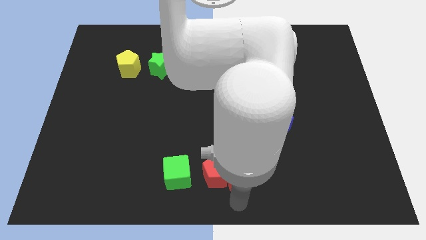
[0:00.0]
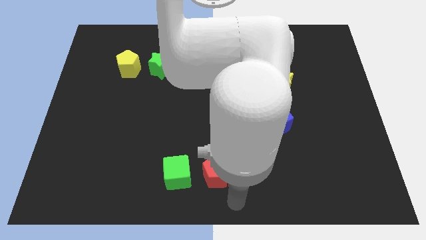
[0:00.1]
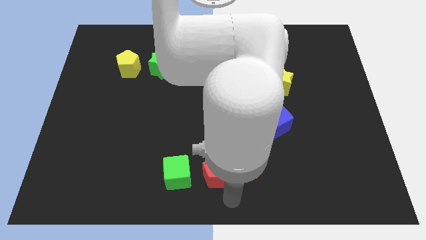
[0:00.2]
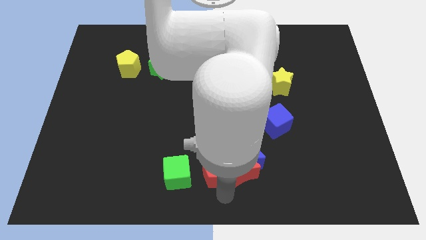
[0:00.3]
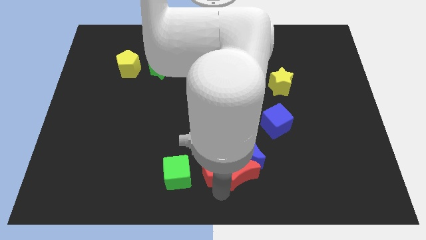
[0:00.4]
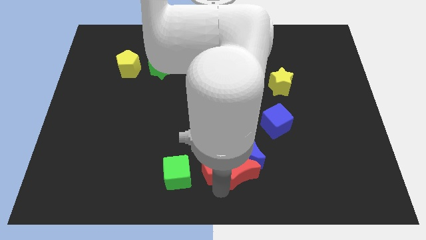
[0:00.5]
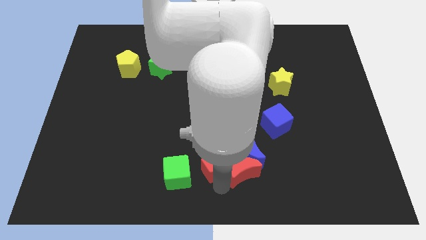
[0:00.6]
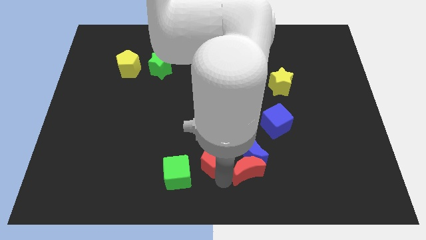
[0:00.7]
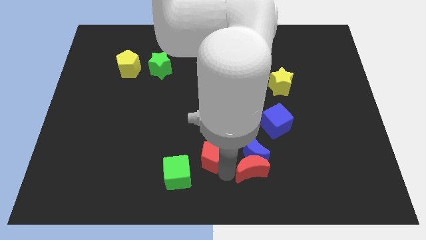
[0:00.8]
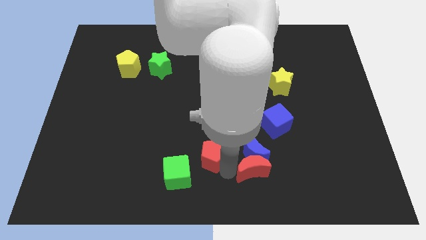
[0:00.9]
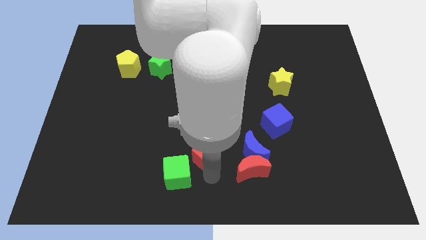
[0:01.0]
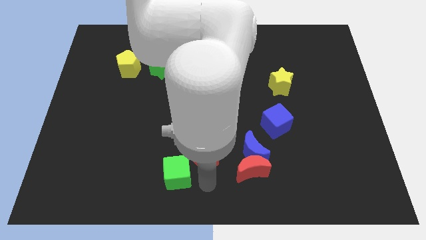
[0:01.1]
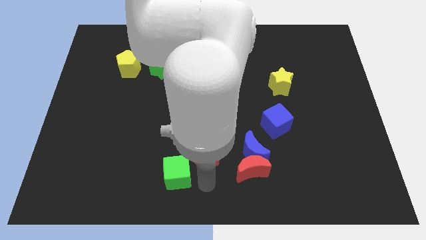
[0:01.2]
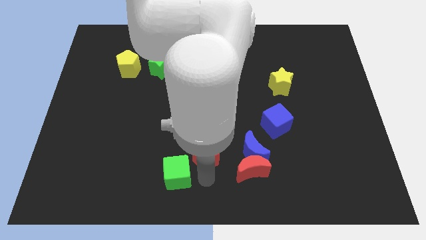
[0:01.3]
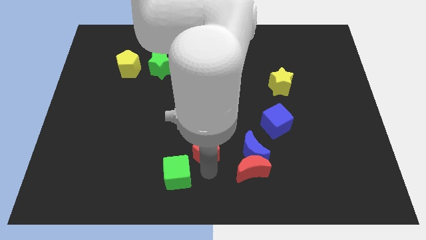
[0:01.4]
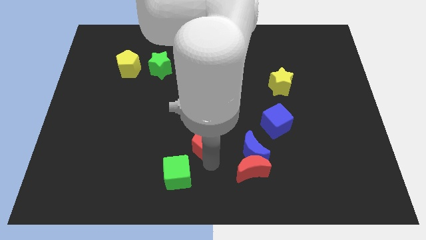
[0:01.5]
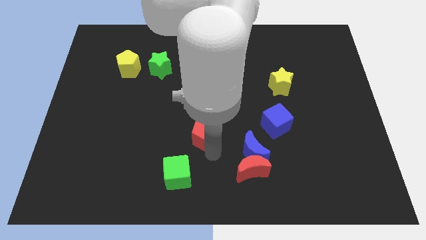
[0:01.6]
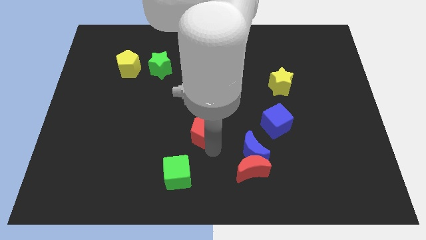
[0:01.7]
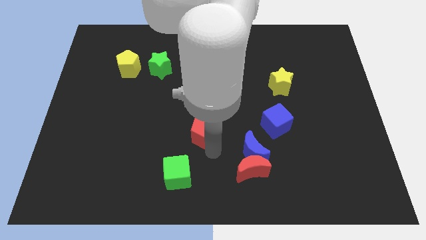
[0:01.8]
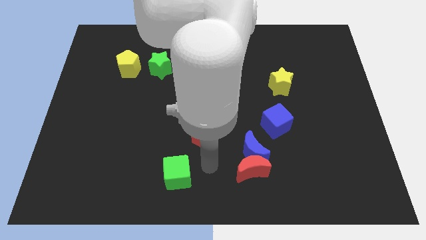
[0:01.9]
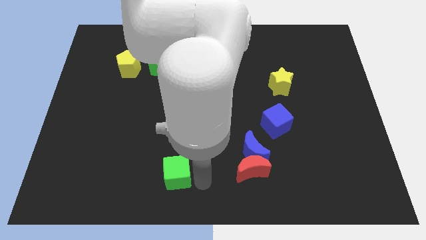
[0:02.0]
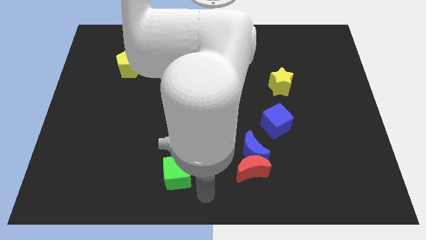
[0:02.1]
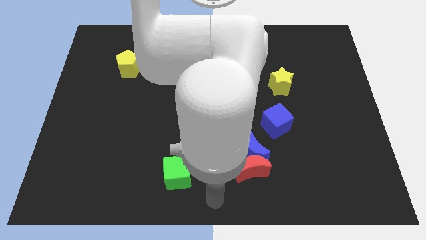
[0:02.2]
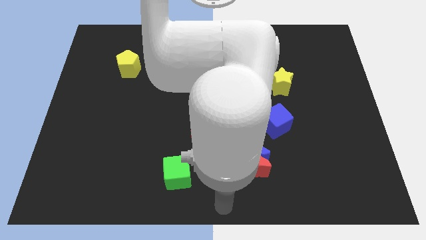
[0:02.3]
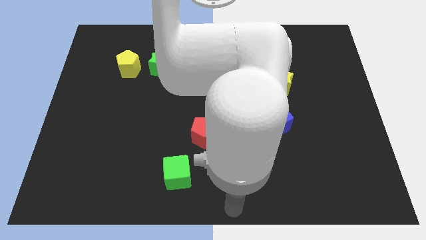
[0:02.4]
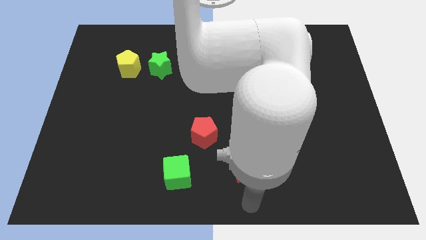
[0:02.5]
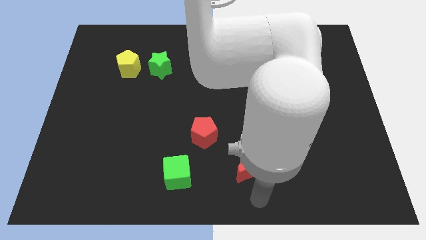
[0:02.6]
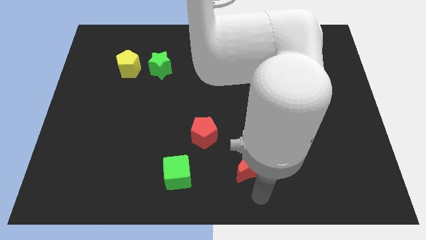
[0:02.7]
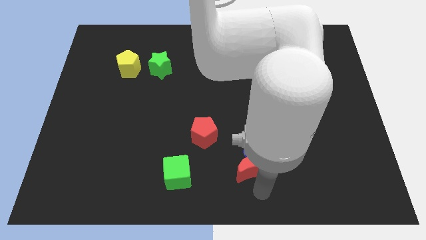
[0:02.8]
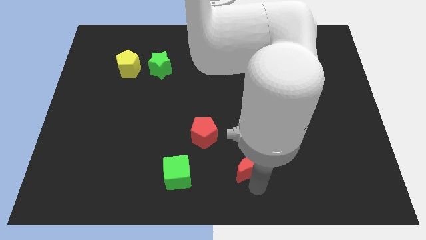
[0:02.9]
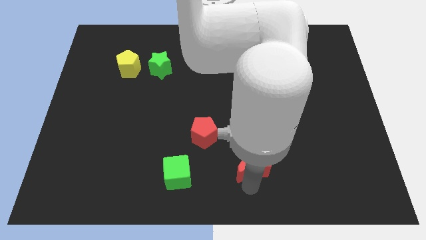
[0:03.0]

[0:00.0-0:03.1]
move the red pentagon diagonal to the top right of the green cube

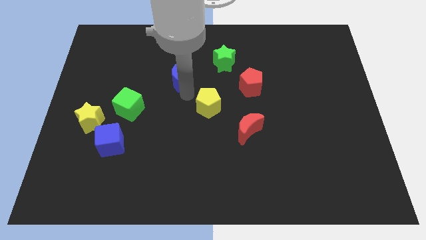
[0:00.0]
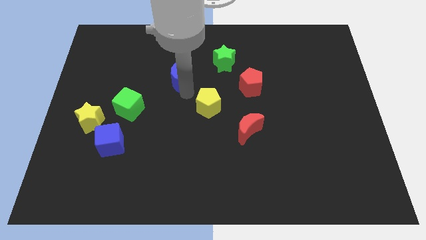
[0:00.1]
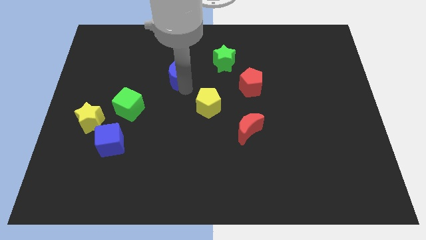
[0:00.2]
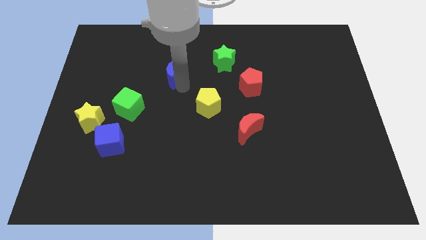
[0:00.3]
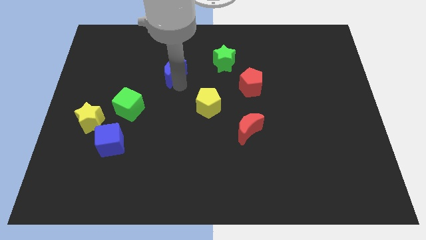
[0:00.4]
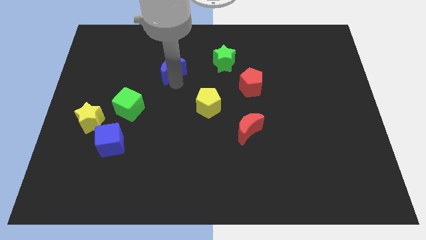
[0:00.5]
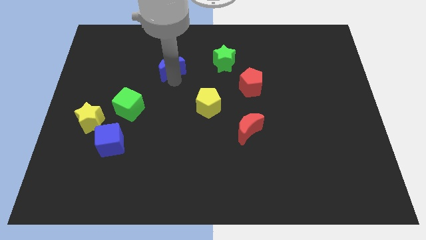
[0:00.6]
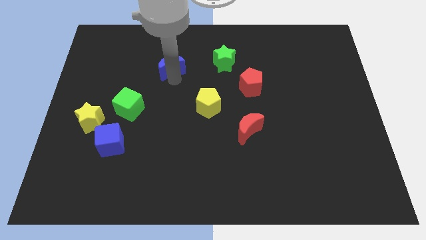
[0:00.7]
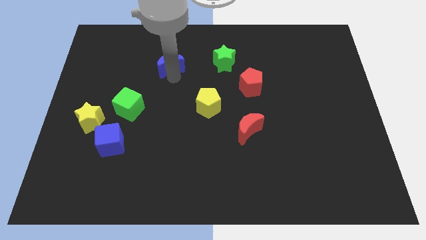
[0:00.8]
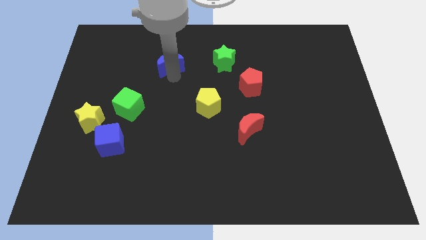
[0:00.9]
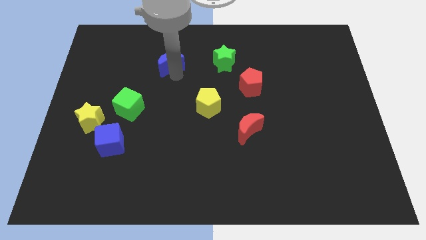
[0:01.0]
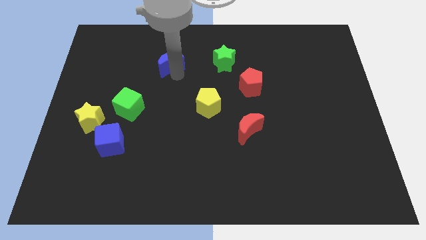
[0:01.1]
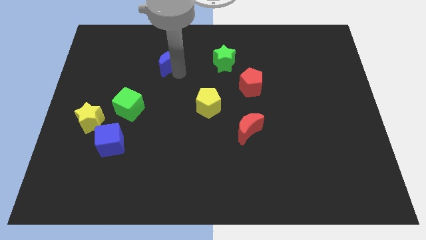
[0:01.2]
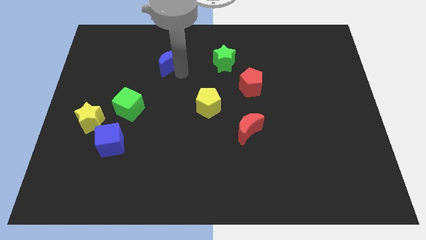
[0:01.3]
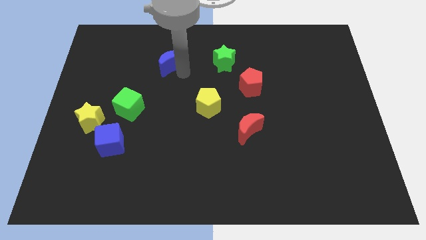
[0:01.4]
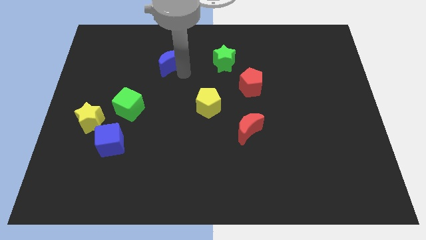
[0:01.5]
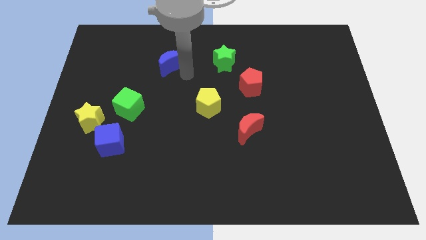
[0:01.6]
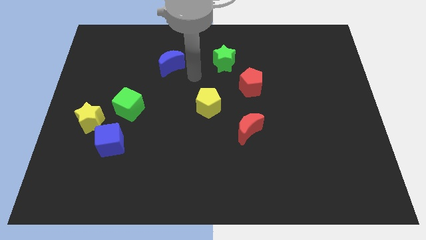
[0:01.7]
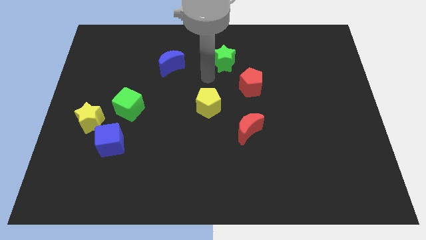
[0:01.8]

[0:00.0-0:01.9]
move the blue crescent to the top

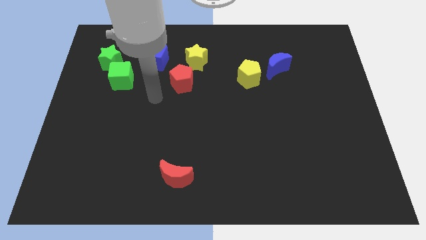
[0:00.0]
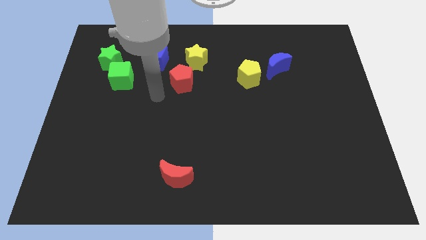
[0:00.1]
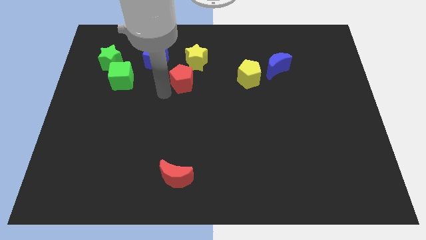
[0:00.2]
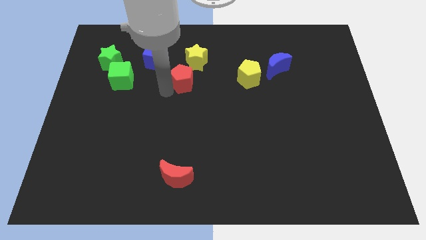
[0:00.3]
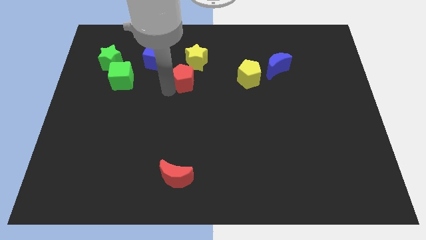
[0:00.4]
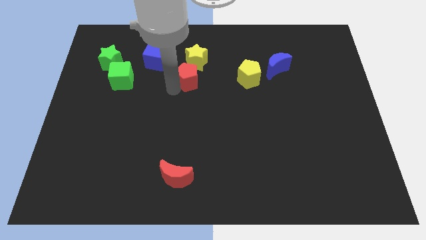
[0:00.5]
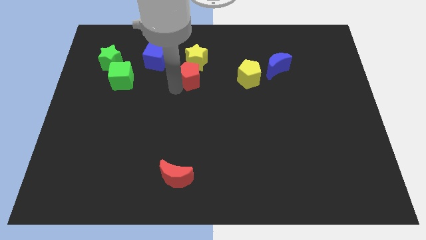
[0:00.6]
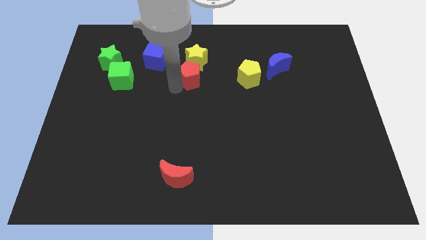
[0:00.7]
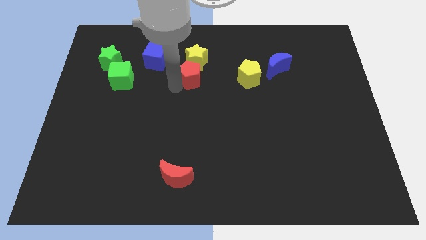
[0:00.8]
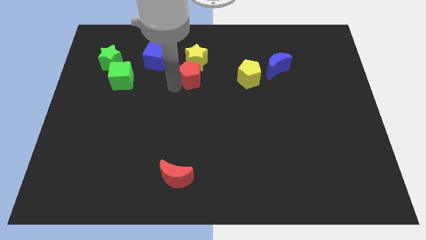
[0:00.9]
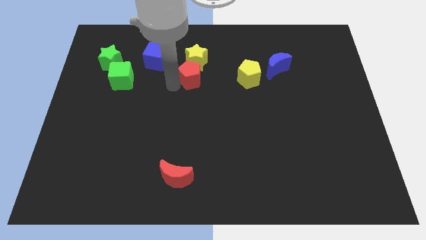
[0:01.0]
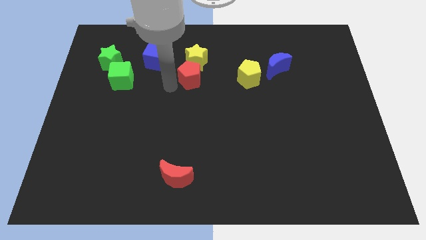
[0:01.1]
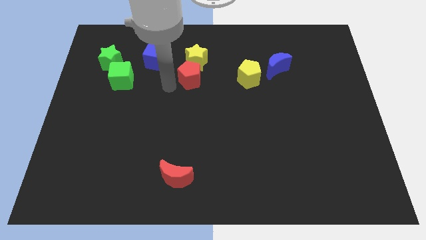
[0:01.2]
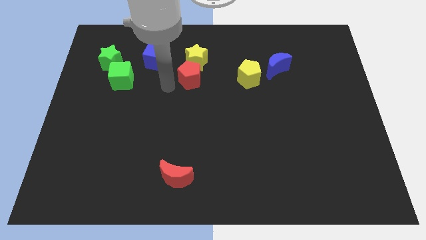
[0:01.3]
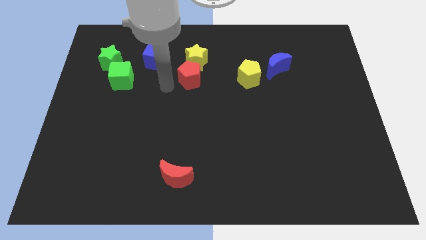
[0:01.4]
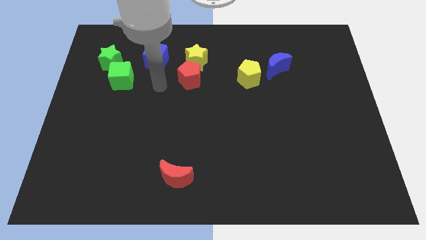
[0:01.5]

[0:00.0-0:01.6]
move the red pentagon close to the bottom of the yellow star

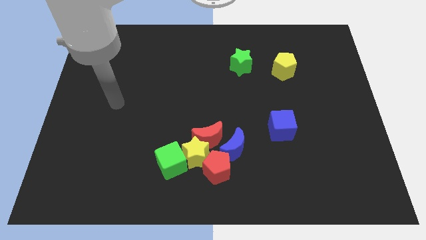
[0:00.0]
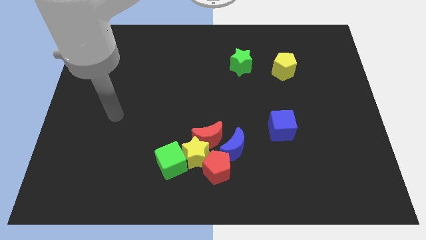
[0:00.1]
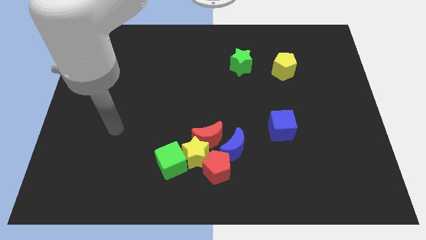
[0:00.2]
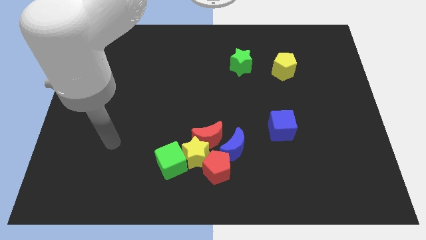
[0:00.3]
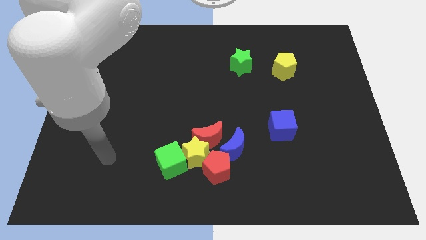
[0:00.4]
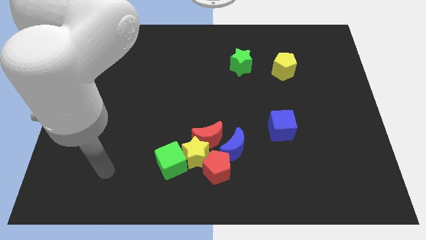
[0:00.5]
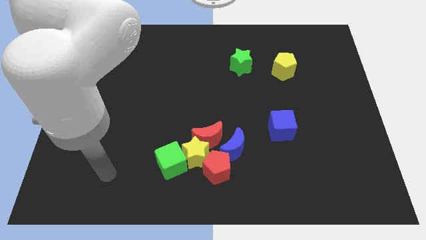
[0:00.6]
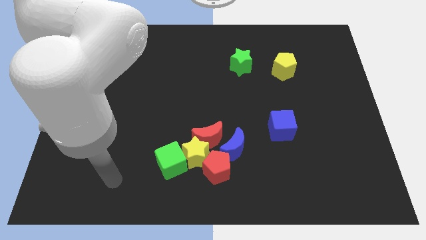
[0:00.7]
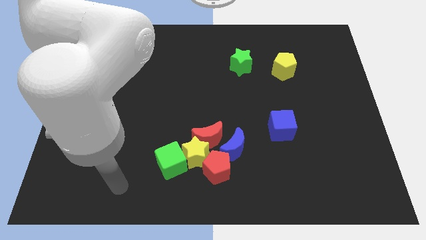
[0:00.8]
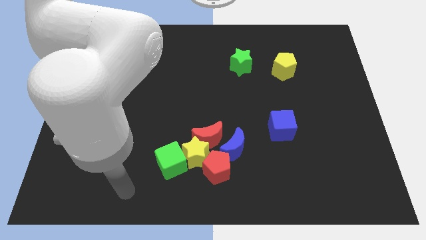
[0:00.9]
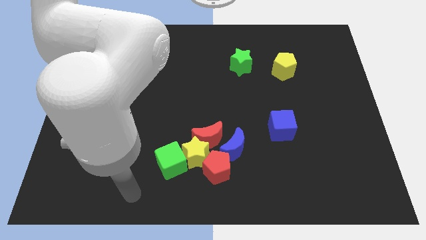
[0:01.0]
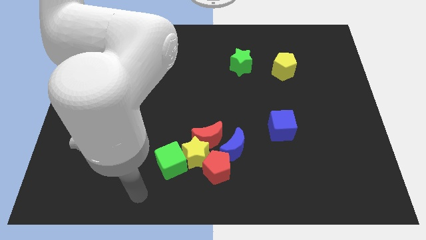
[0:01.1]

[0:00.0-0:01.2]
place your arm to the left side of the green cube

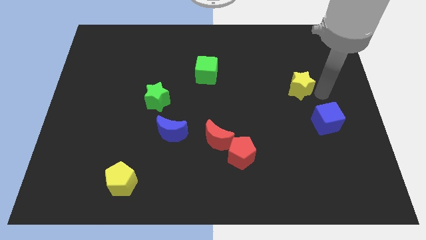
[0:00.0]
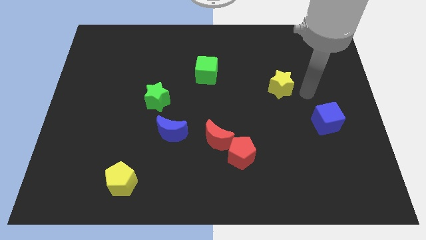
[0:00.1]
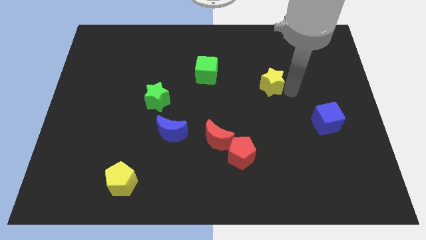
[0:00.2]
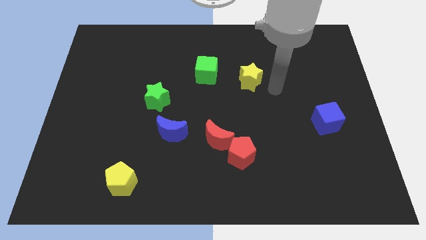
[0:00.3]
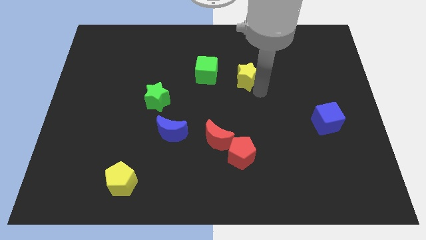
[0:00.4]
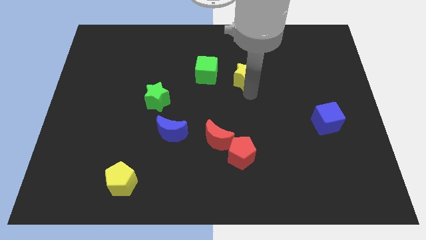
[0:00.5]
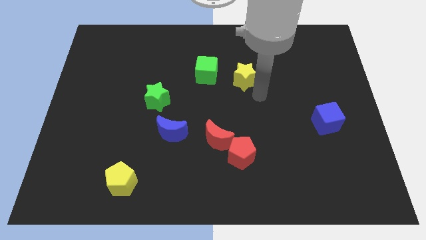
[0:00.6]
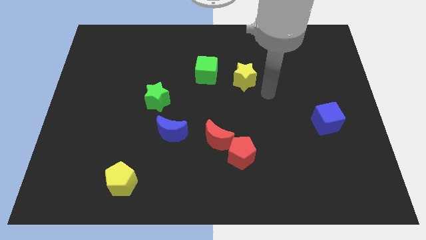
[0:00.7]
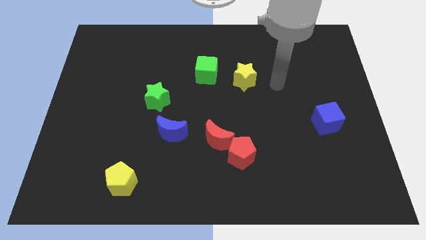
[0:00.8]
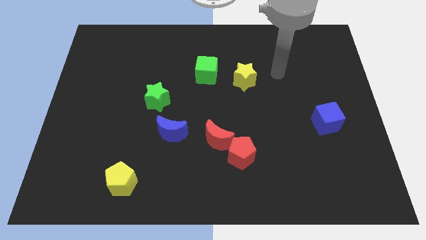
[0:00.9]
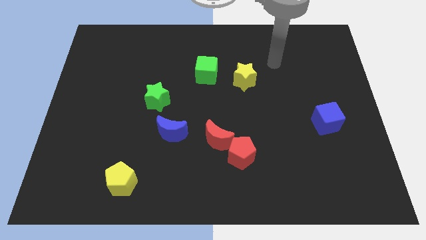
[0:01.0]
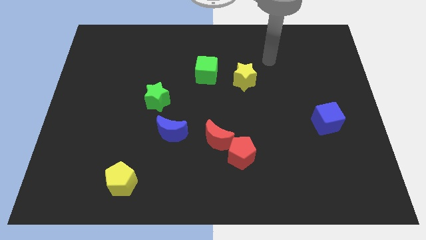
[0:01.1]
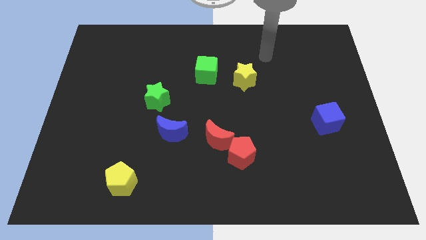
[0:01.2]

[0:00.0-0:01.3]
move the yellow star to the right of the green cube
